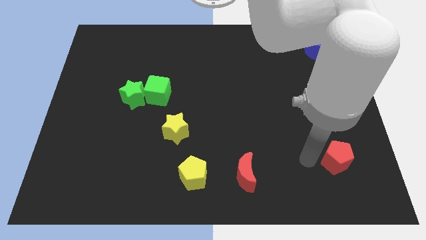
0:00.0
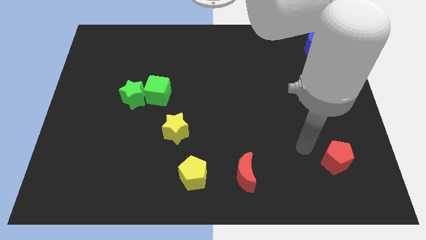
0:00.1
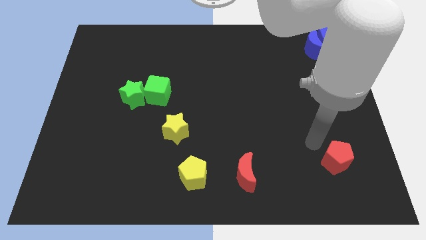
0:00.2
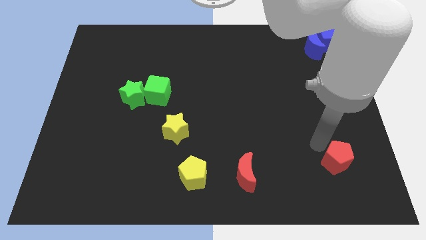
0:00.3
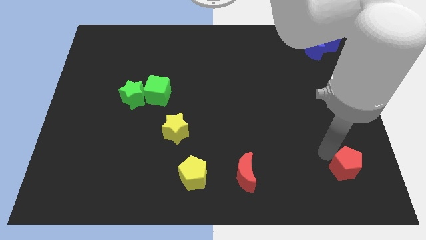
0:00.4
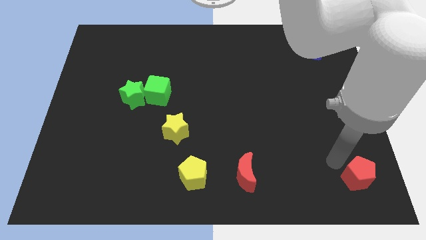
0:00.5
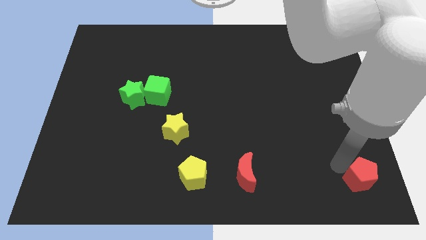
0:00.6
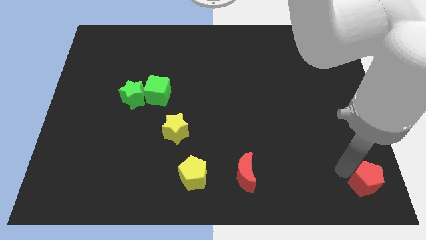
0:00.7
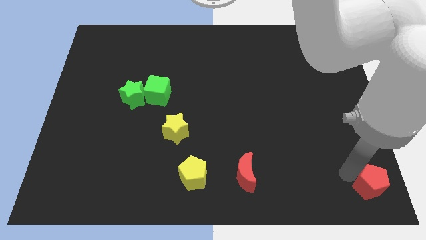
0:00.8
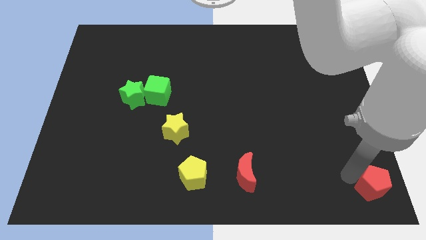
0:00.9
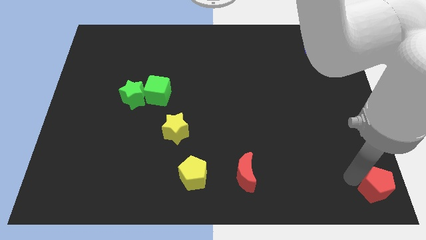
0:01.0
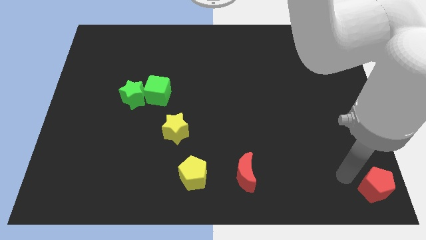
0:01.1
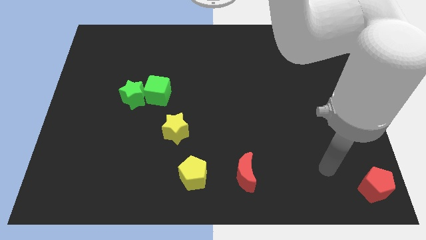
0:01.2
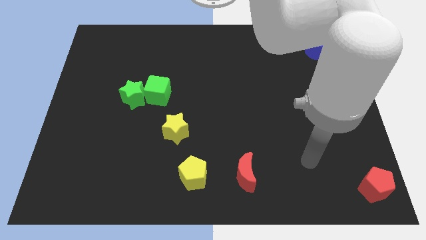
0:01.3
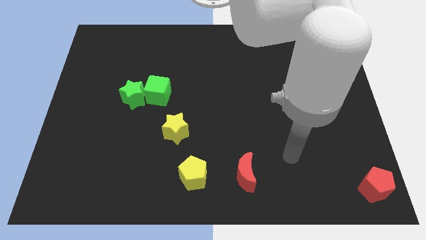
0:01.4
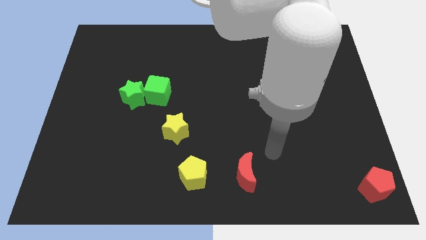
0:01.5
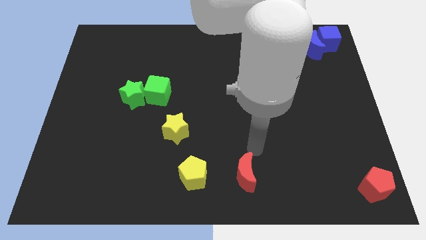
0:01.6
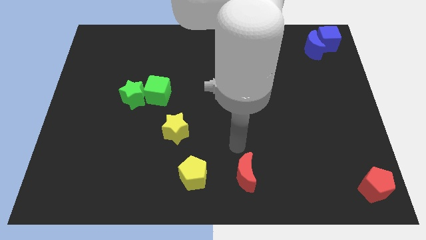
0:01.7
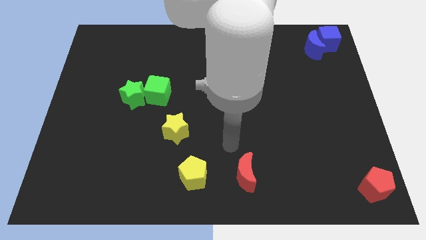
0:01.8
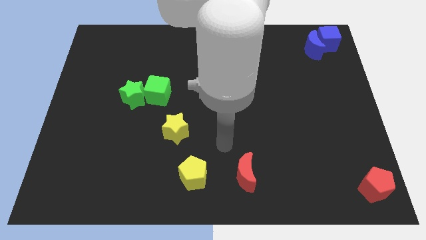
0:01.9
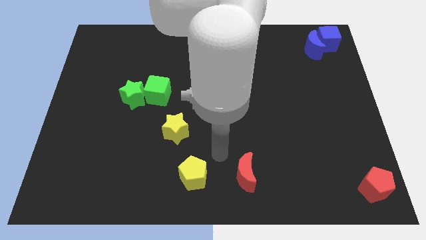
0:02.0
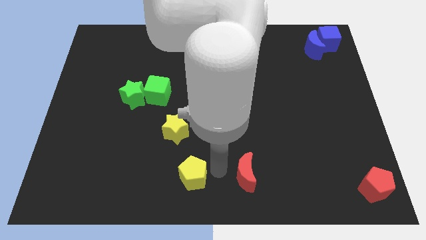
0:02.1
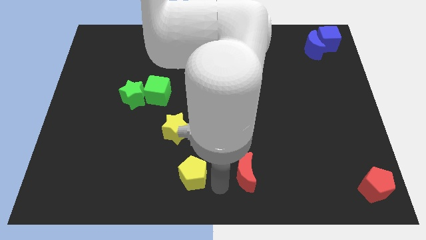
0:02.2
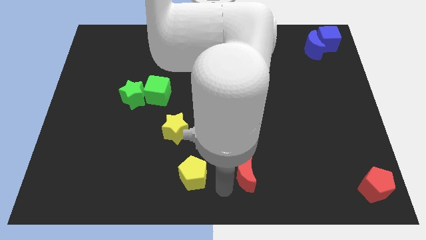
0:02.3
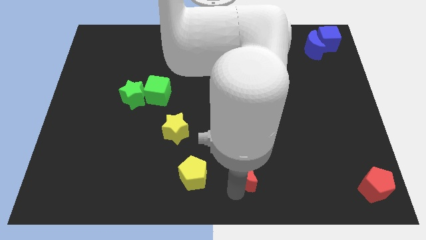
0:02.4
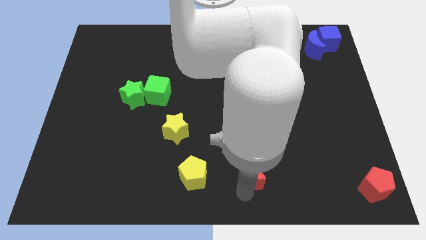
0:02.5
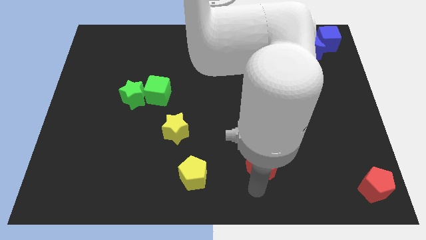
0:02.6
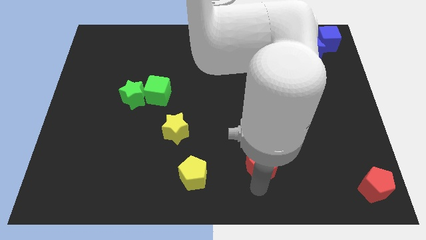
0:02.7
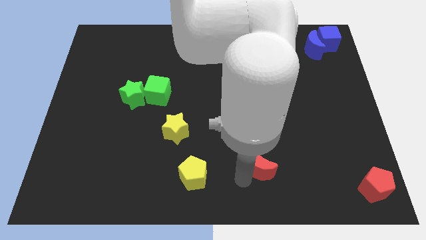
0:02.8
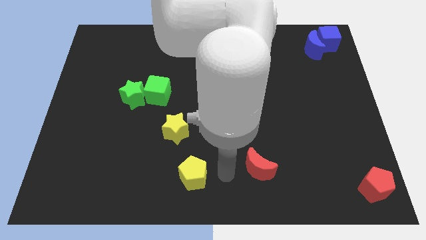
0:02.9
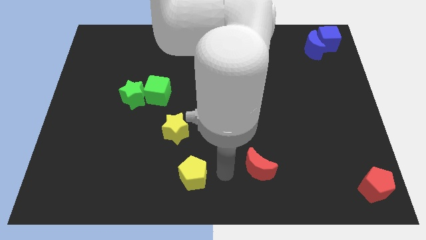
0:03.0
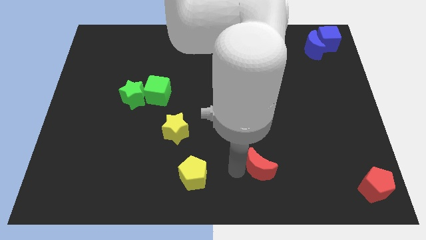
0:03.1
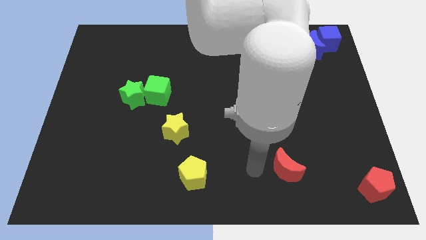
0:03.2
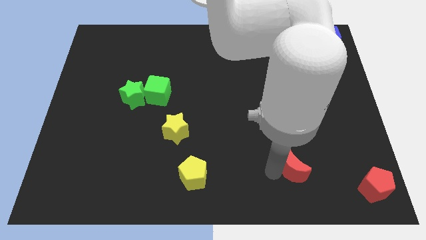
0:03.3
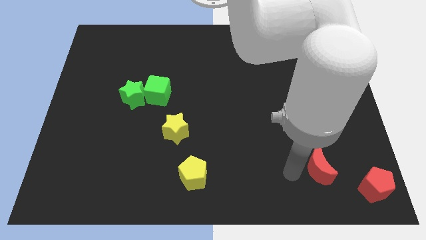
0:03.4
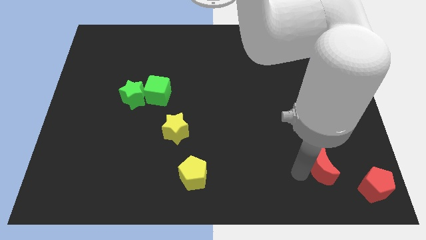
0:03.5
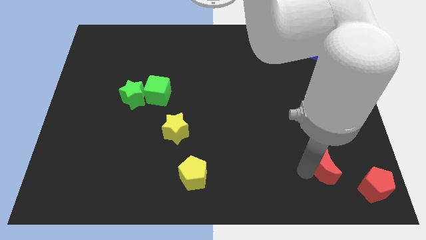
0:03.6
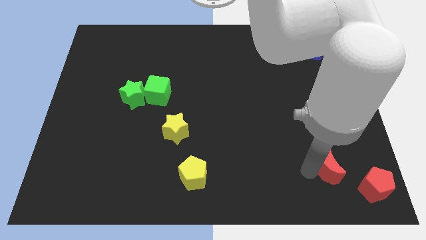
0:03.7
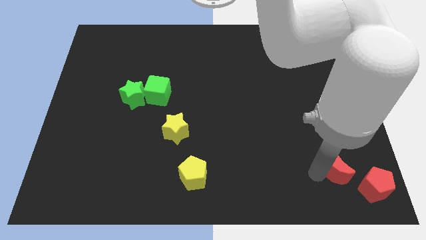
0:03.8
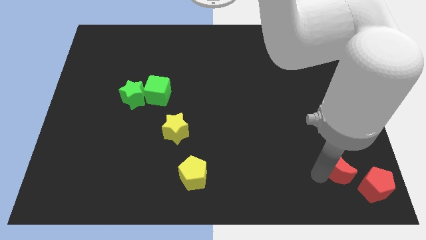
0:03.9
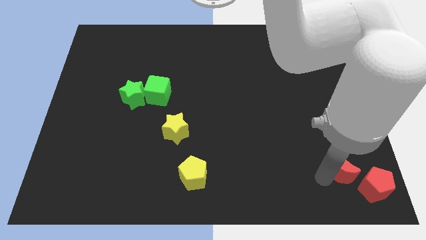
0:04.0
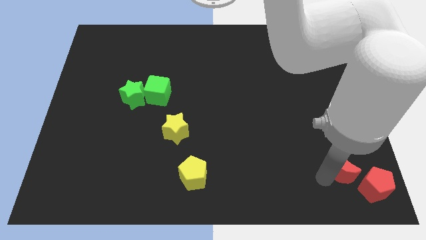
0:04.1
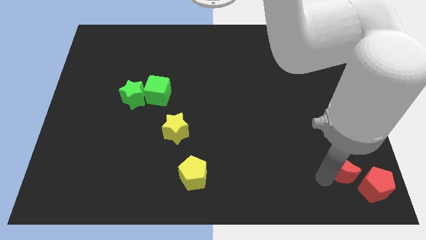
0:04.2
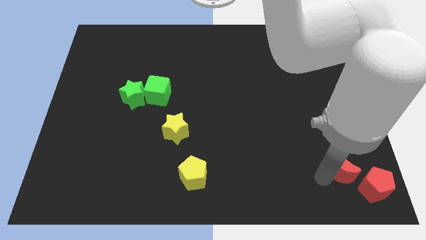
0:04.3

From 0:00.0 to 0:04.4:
move the red blocks to the bottom right

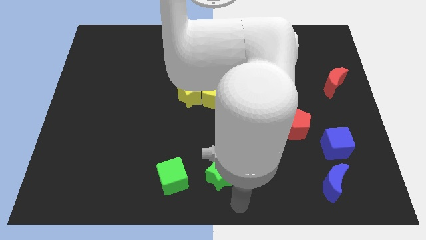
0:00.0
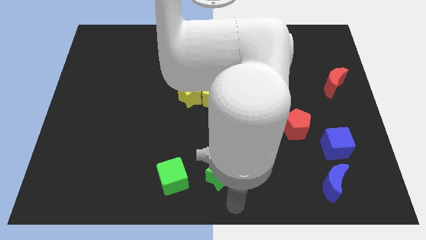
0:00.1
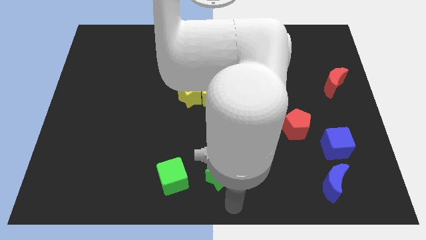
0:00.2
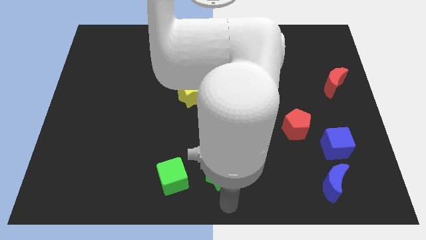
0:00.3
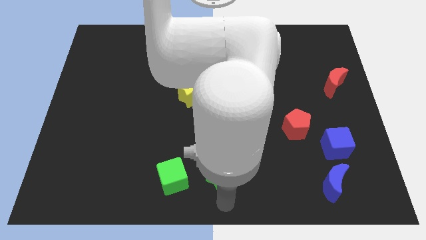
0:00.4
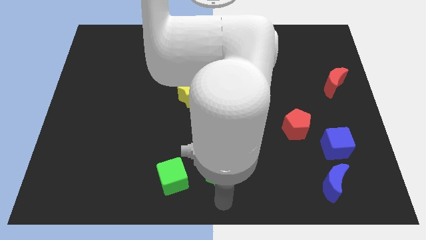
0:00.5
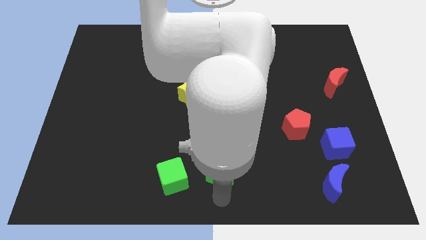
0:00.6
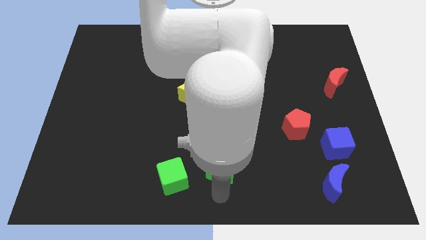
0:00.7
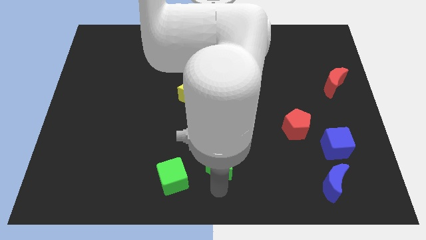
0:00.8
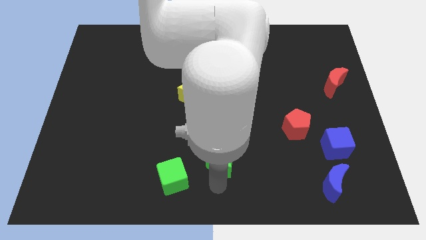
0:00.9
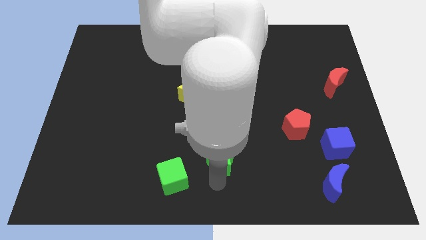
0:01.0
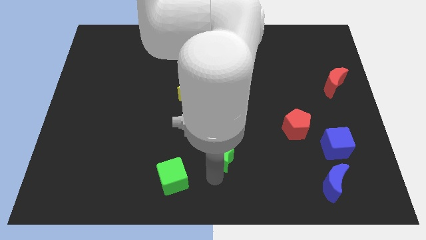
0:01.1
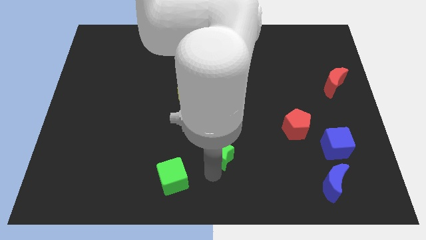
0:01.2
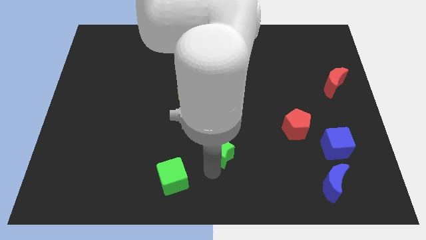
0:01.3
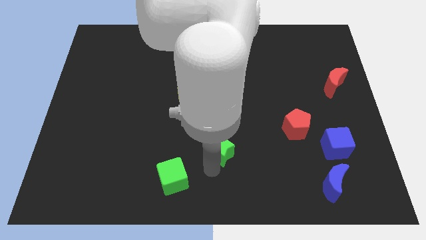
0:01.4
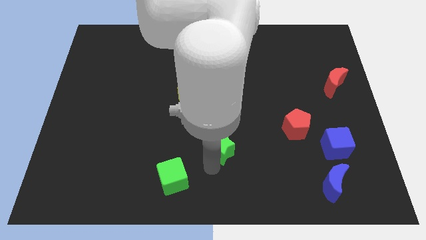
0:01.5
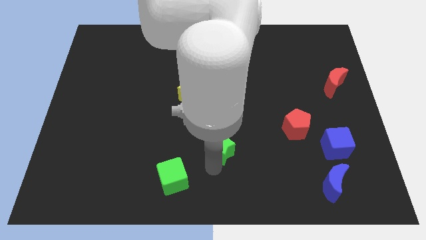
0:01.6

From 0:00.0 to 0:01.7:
push the green star upward

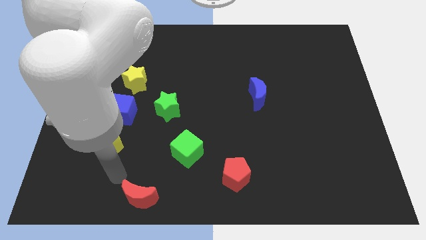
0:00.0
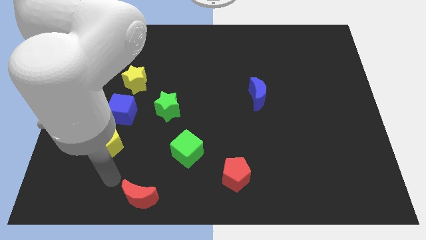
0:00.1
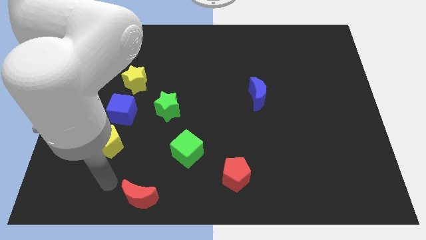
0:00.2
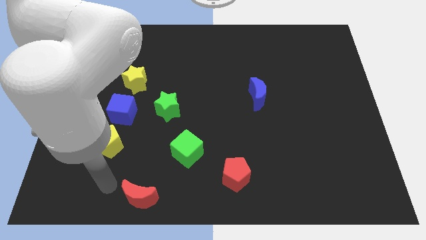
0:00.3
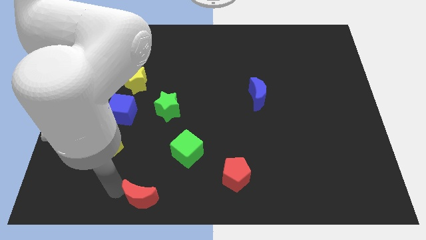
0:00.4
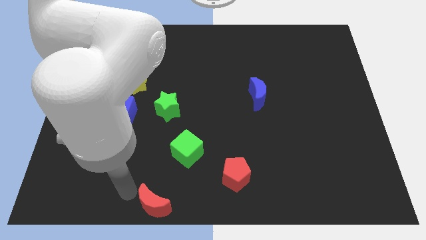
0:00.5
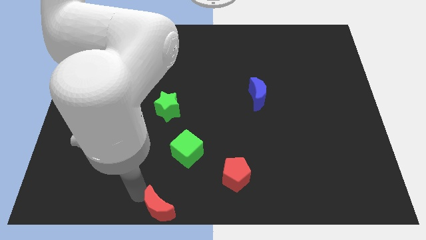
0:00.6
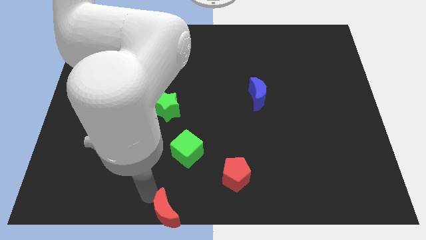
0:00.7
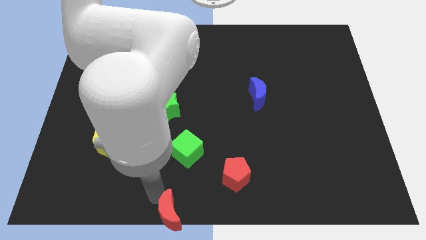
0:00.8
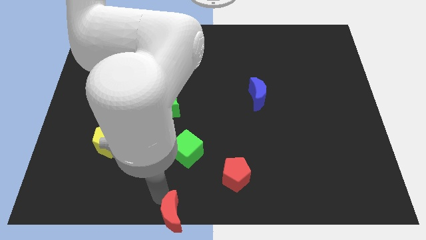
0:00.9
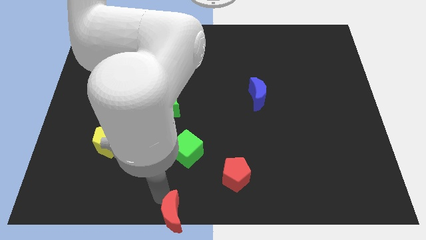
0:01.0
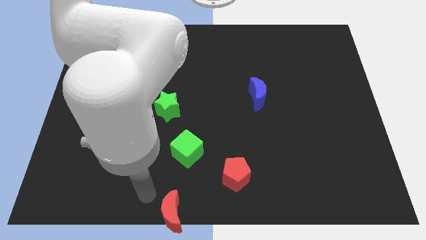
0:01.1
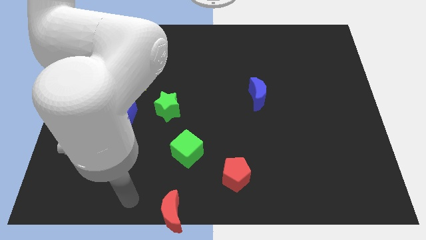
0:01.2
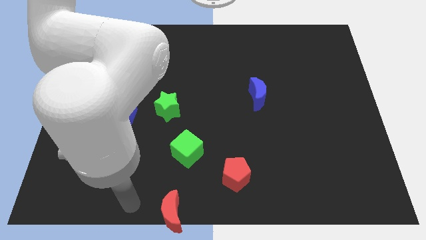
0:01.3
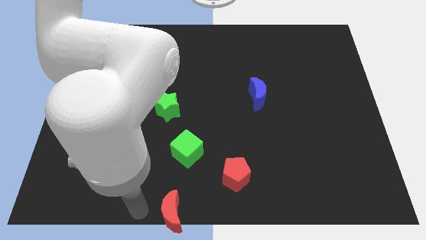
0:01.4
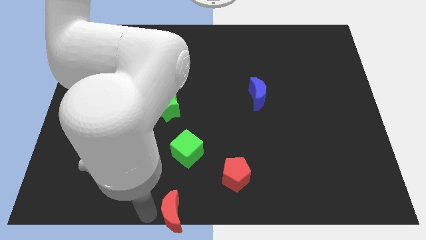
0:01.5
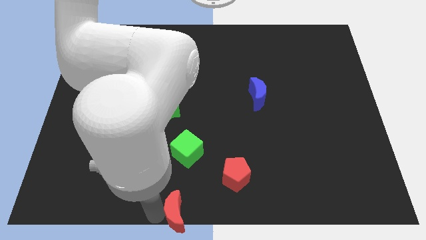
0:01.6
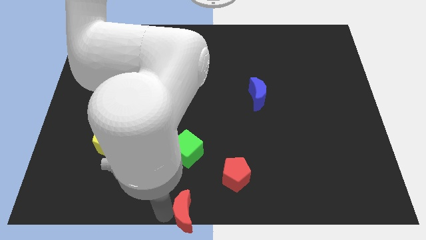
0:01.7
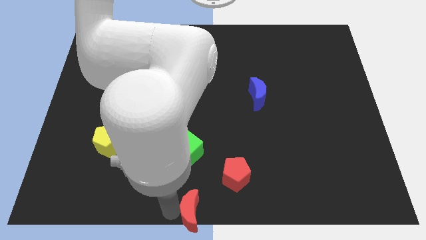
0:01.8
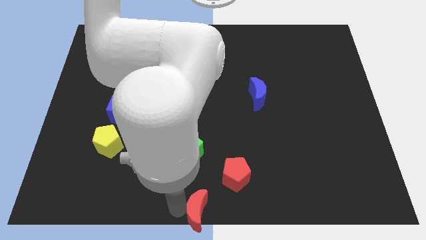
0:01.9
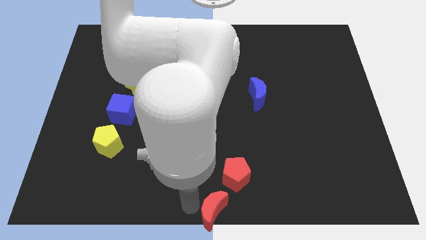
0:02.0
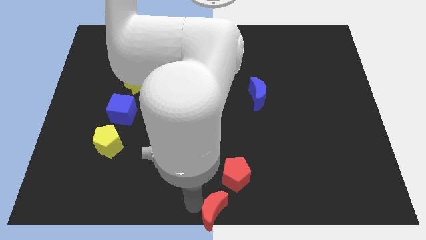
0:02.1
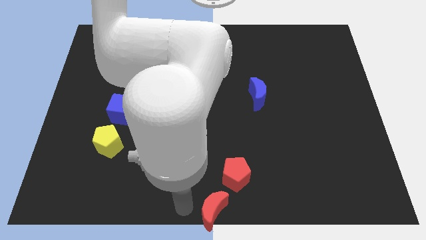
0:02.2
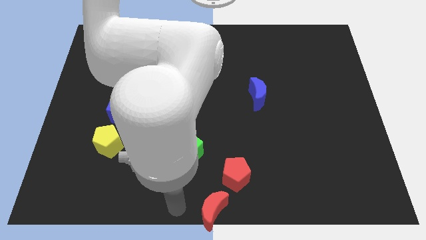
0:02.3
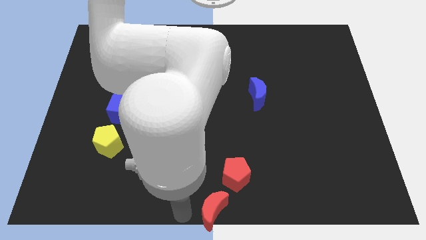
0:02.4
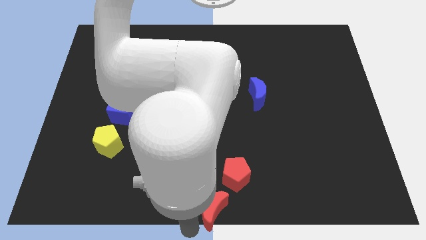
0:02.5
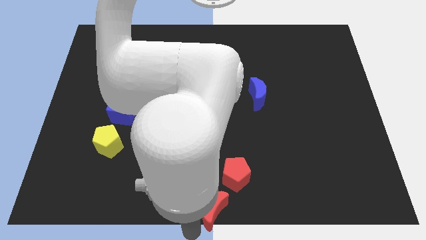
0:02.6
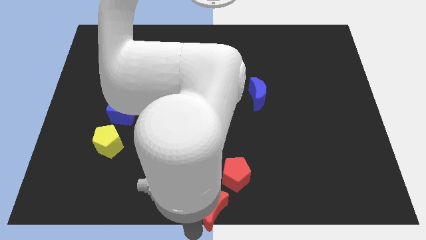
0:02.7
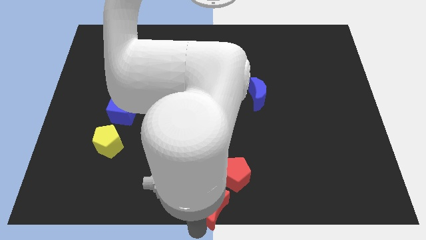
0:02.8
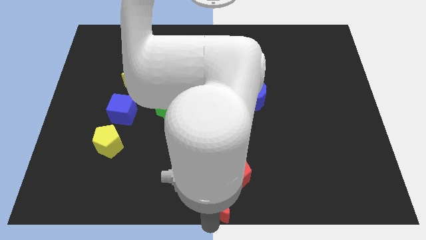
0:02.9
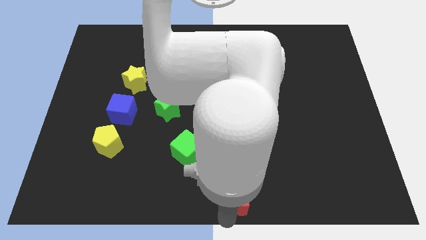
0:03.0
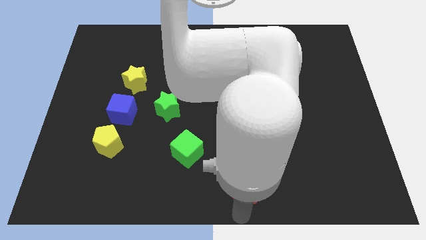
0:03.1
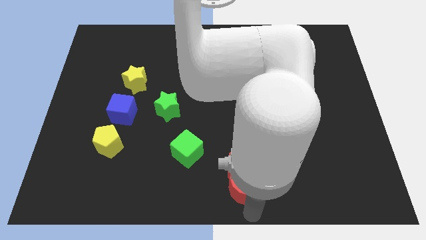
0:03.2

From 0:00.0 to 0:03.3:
push red crescent below red pentagon
